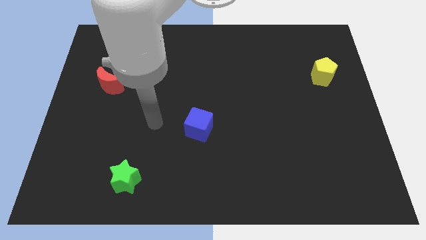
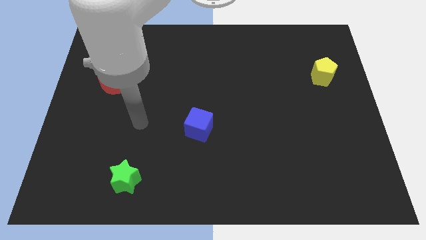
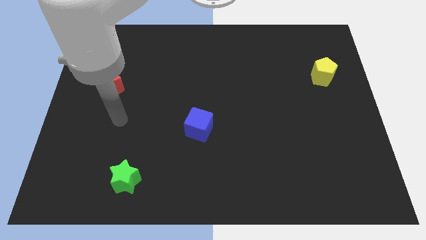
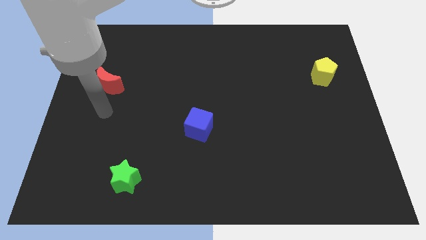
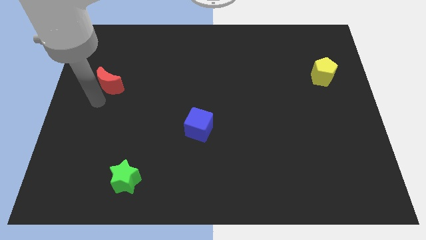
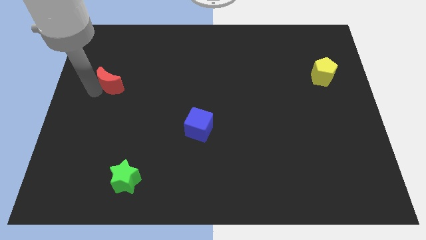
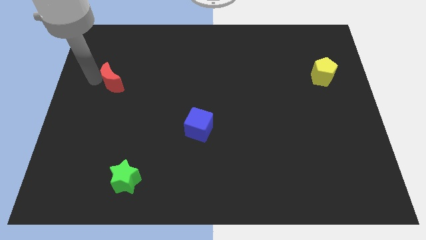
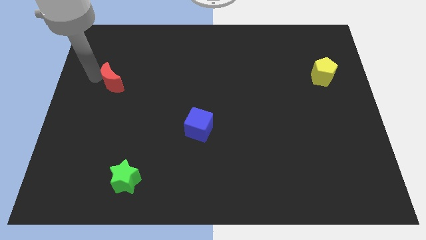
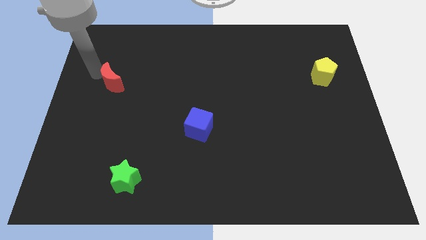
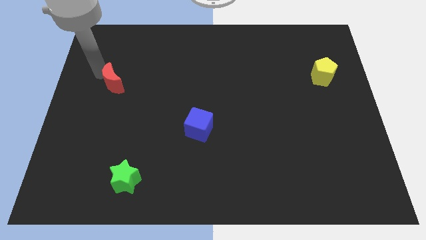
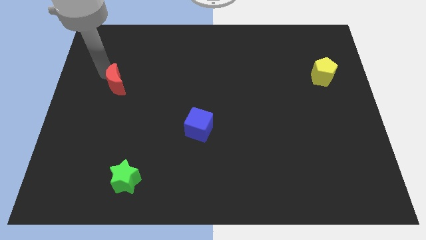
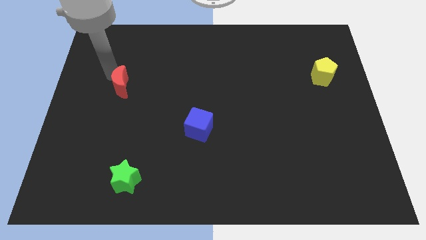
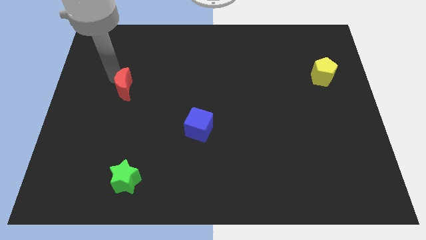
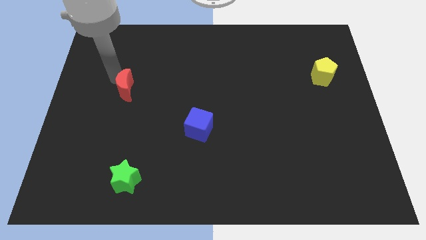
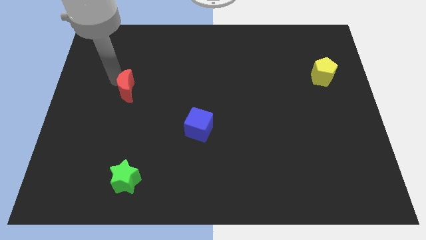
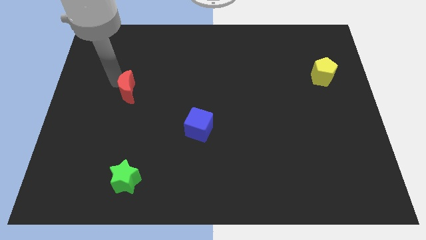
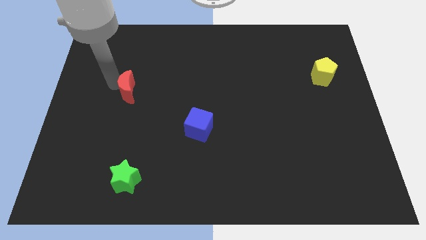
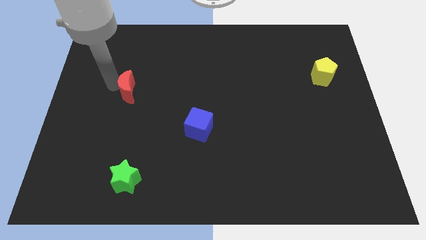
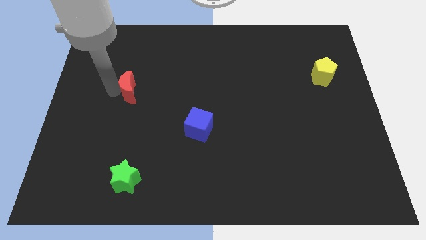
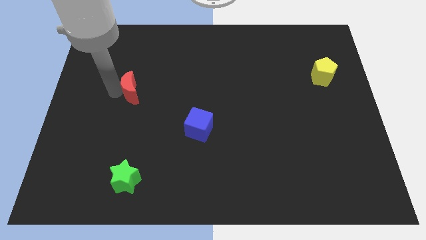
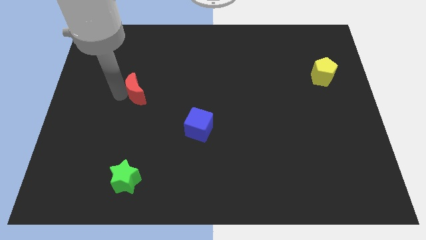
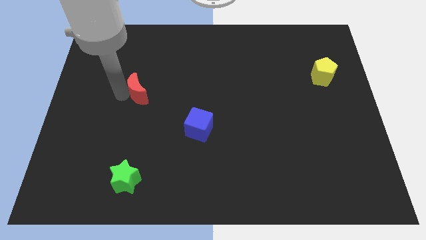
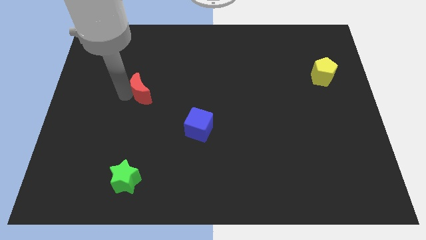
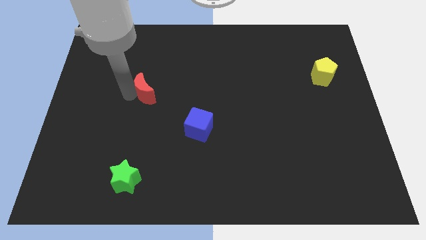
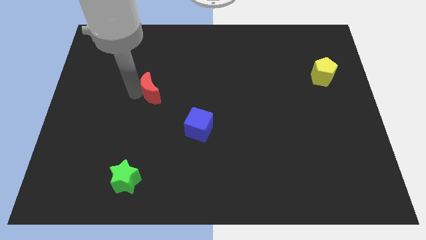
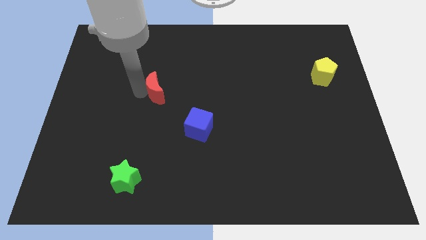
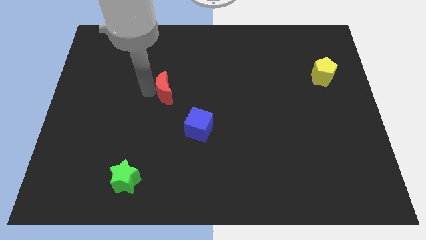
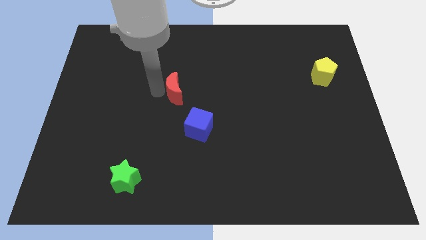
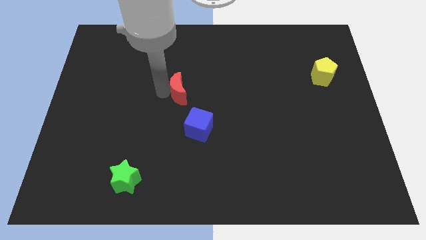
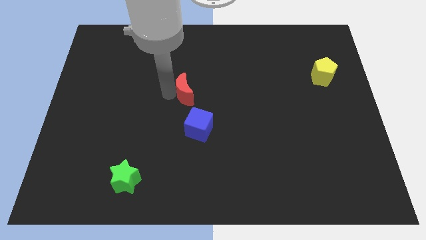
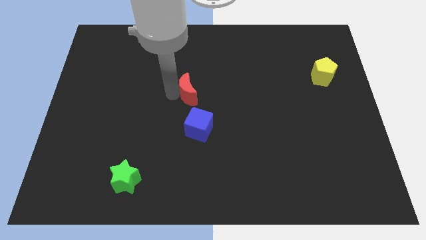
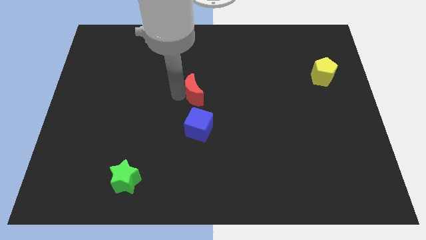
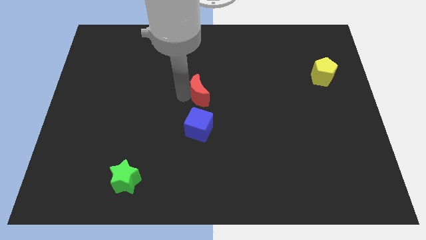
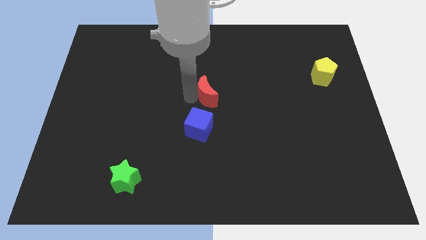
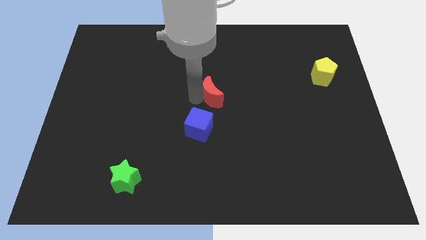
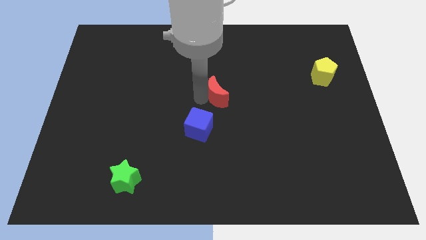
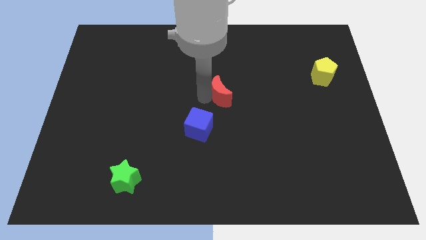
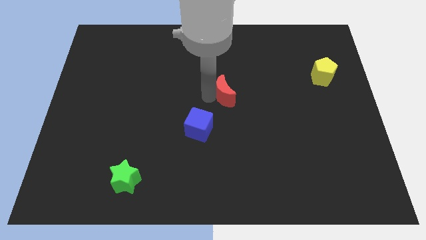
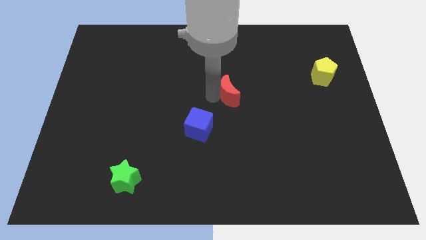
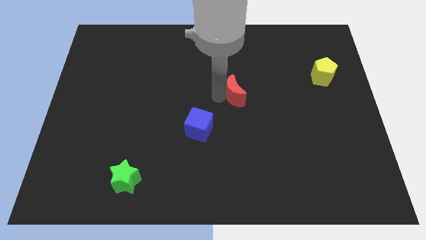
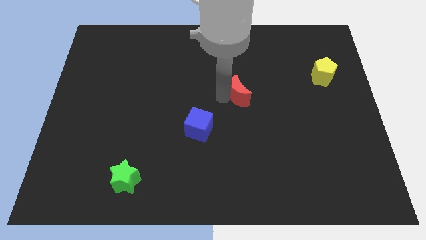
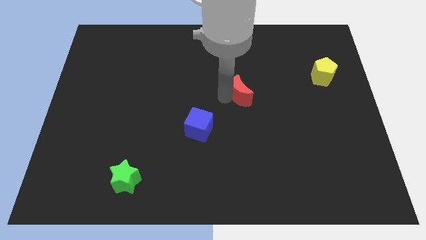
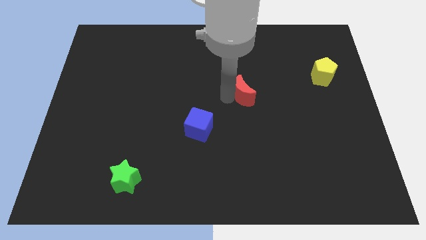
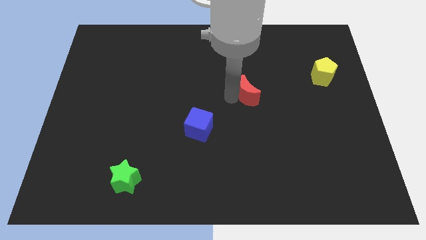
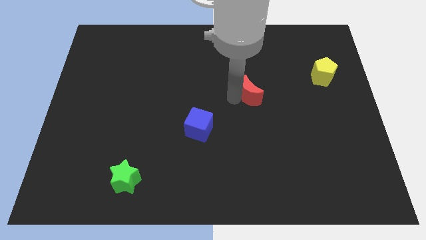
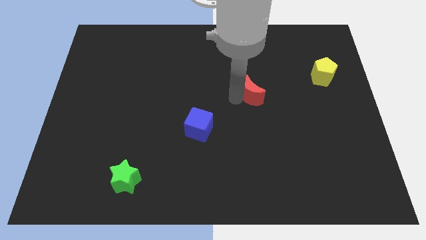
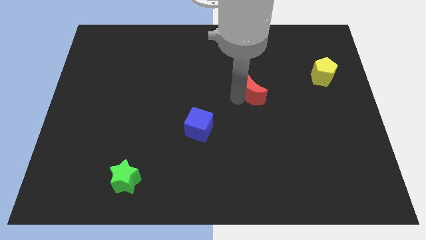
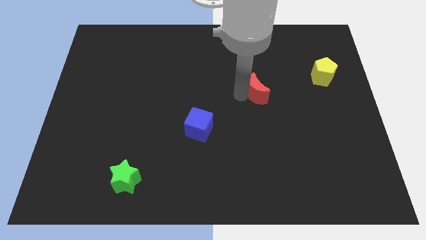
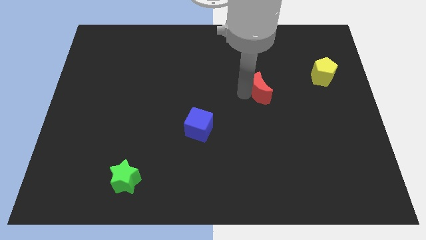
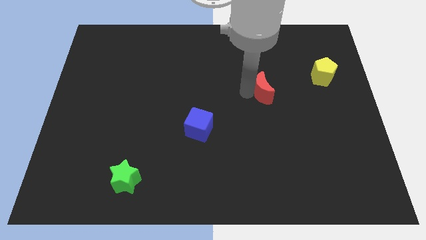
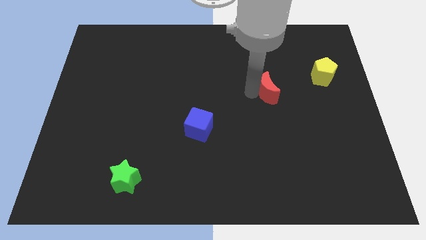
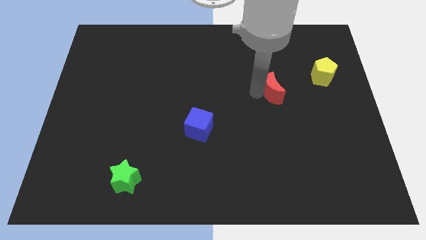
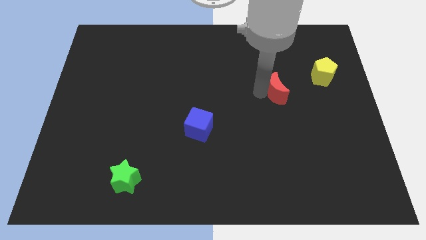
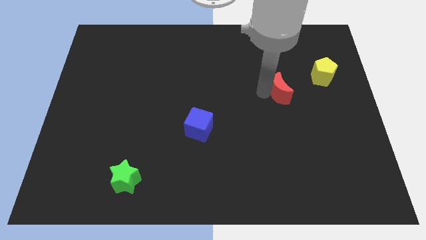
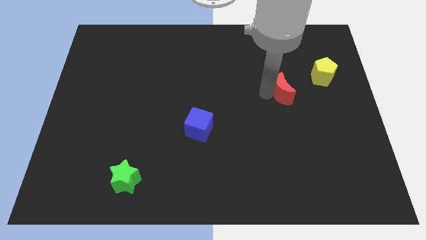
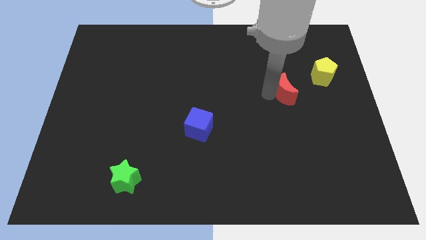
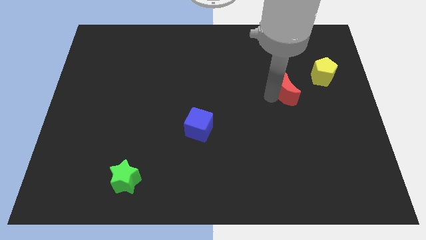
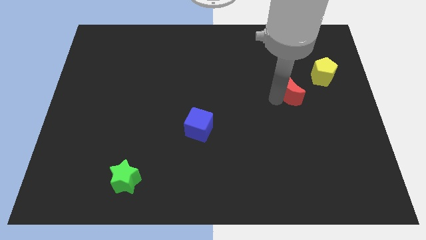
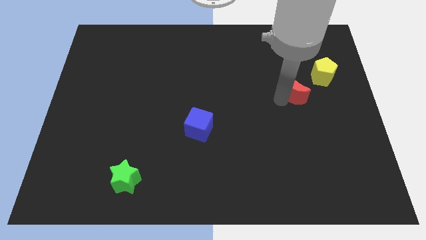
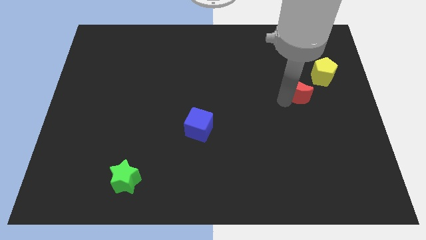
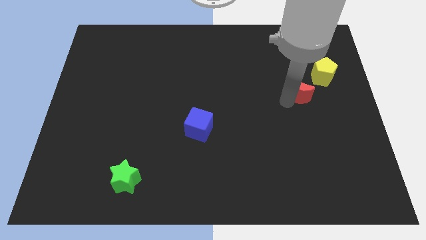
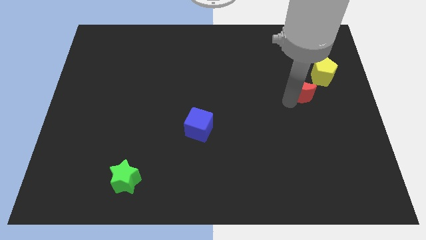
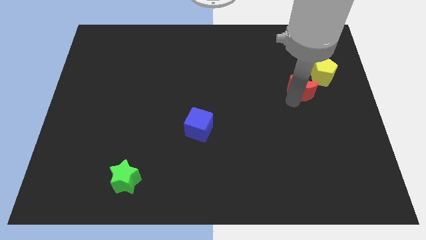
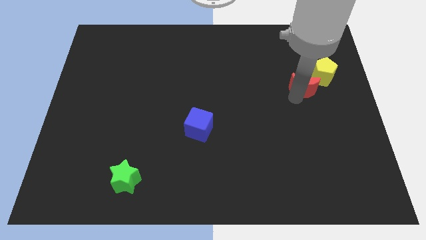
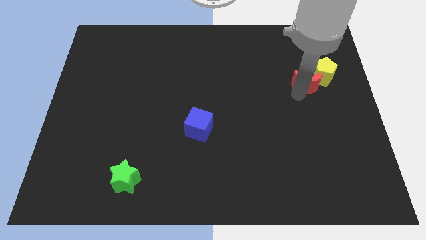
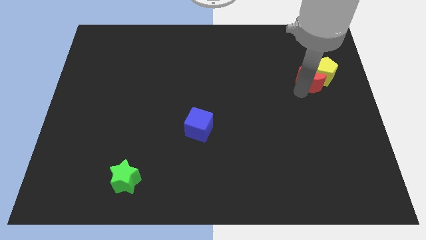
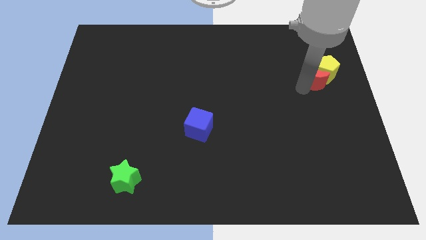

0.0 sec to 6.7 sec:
push the red moon close to the yellow block

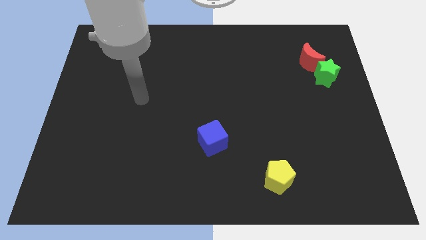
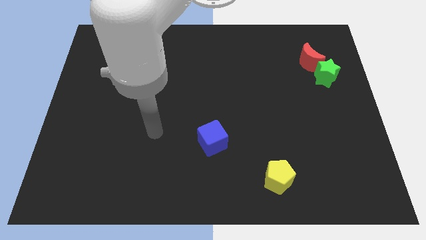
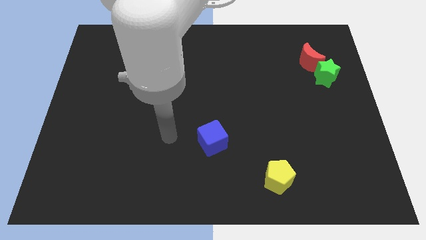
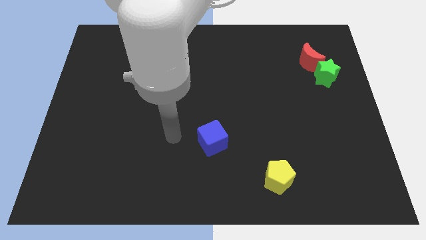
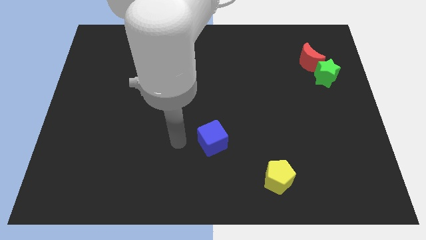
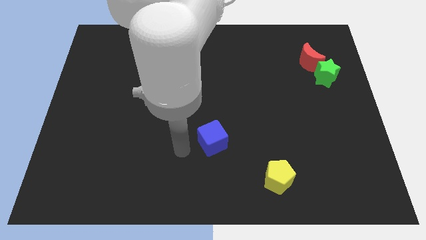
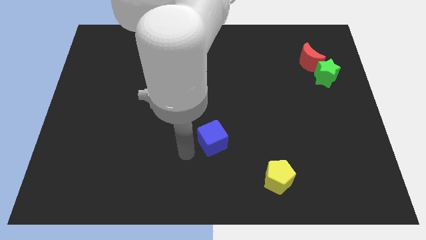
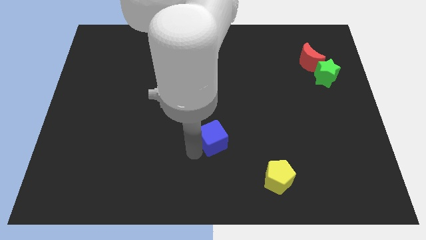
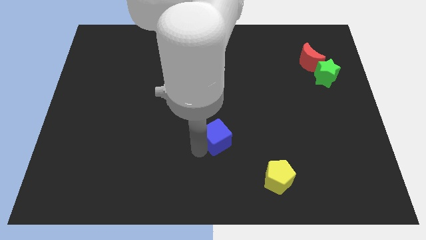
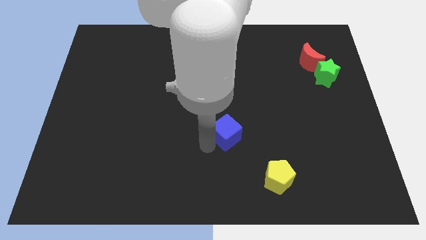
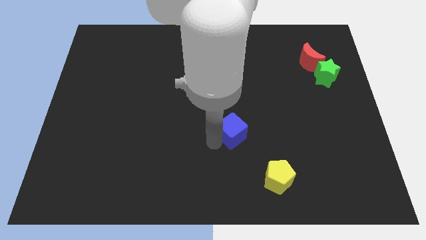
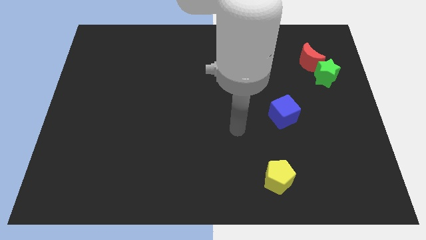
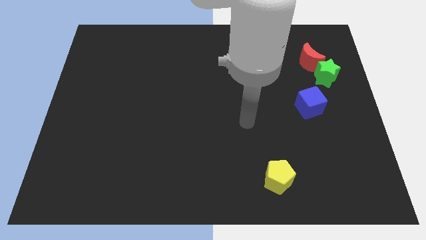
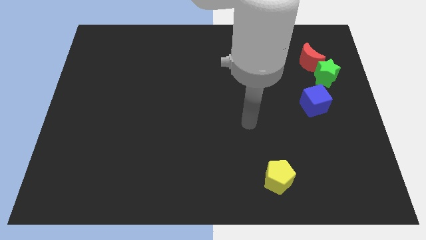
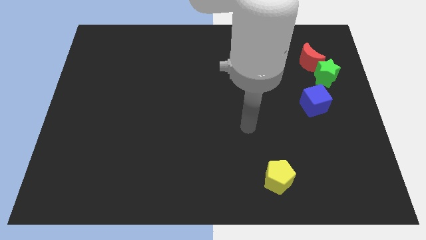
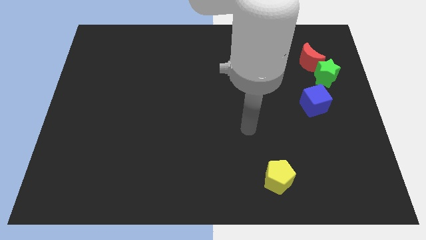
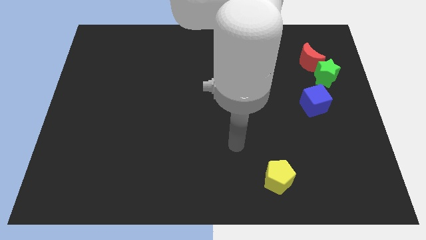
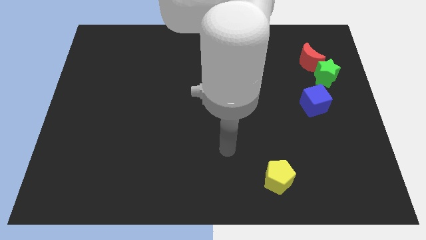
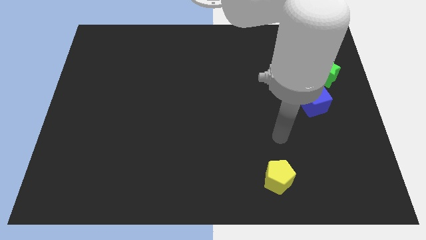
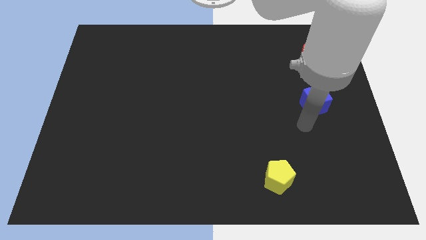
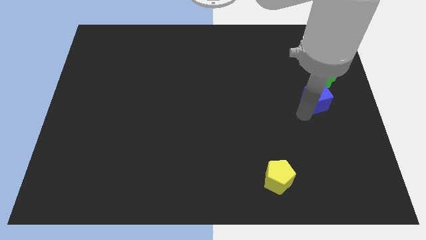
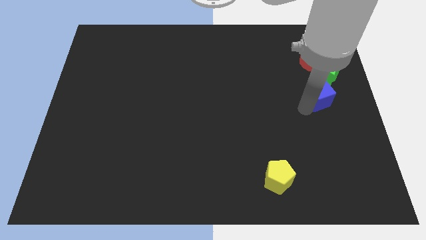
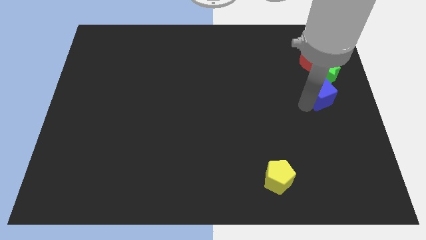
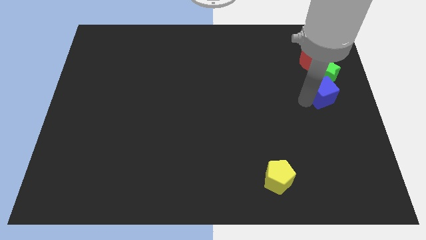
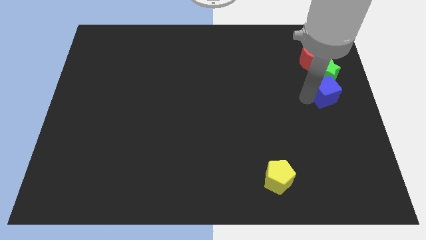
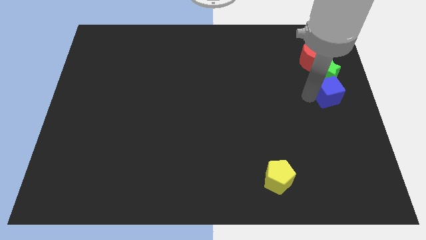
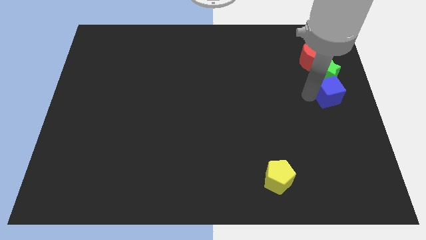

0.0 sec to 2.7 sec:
put the blue cube next to the green star
